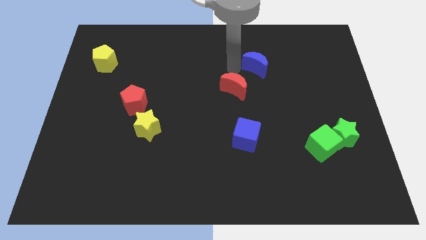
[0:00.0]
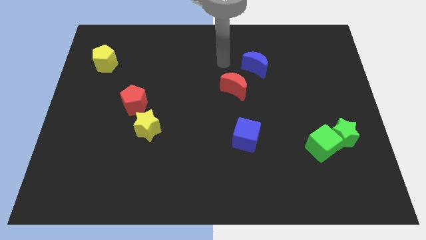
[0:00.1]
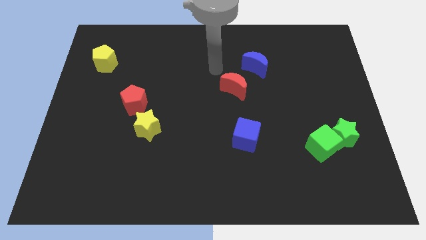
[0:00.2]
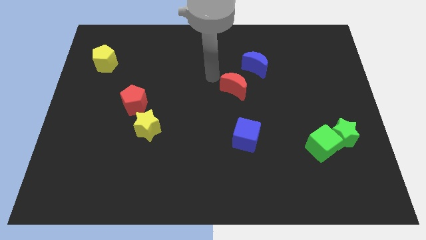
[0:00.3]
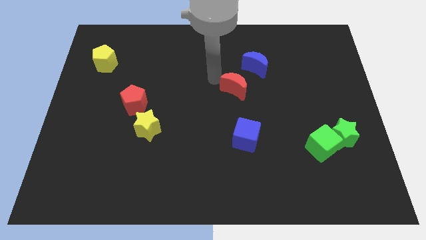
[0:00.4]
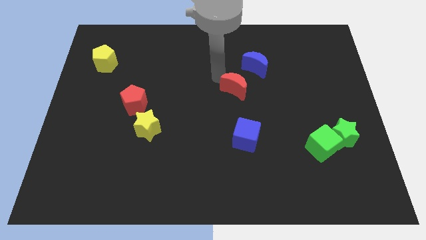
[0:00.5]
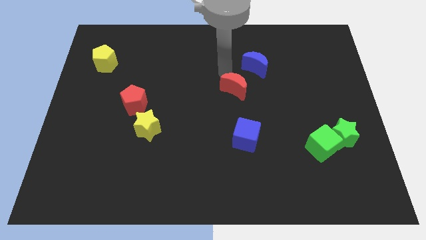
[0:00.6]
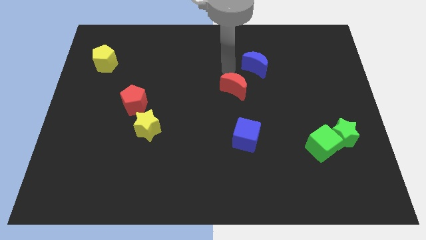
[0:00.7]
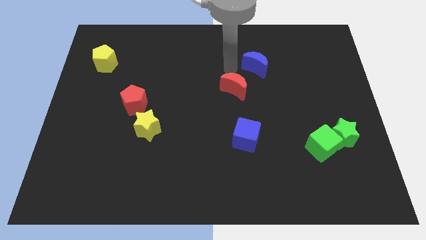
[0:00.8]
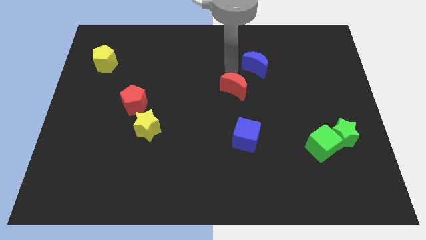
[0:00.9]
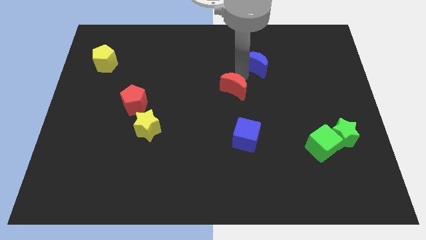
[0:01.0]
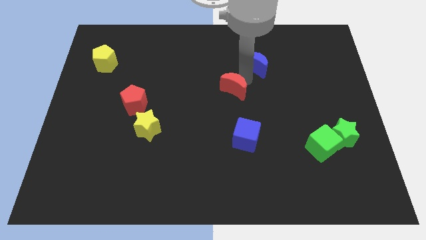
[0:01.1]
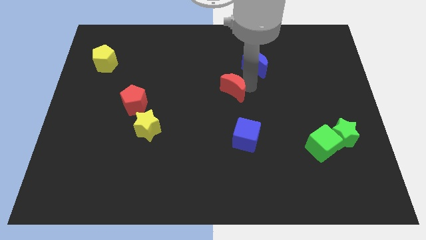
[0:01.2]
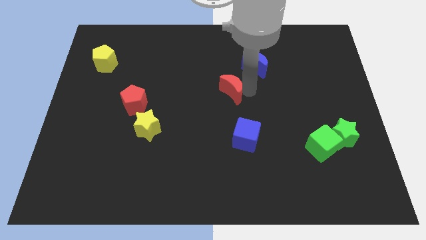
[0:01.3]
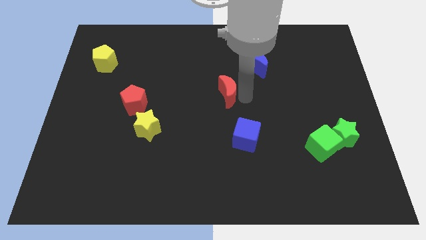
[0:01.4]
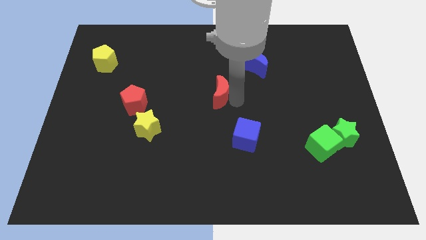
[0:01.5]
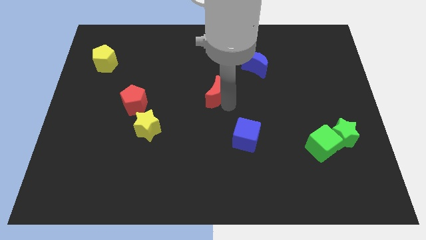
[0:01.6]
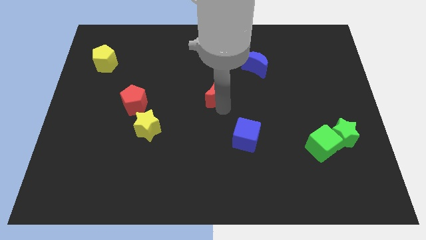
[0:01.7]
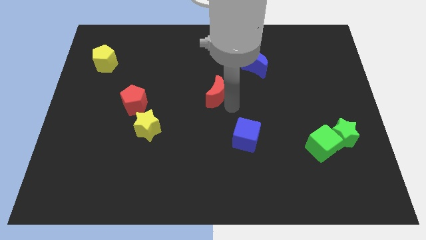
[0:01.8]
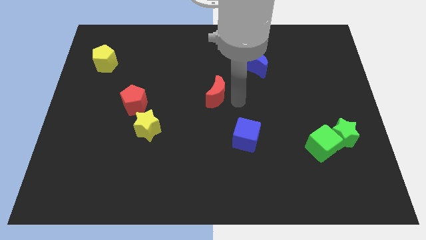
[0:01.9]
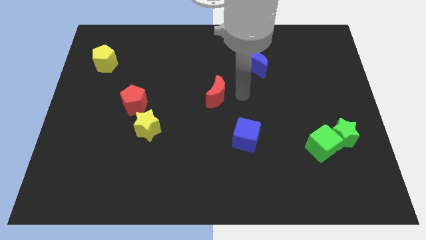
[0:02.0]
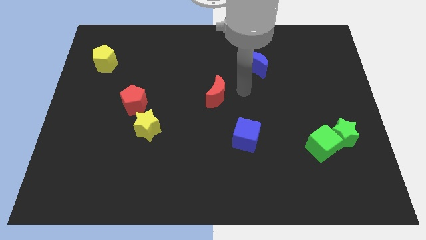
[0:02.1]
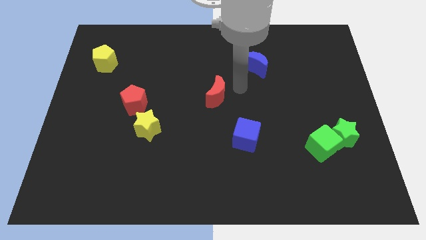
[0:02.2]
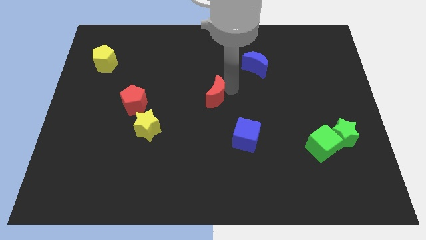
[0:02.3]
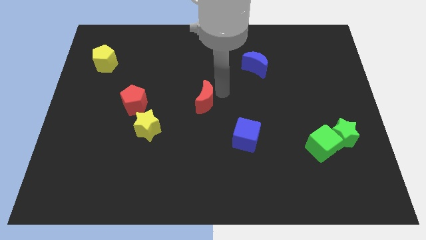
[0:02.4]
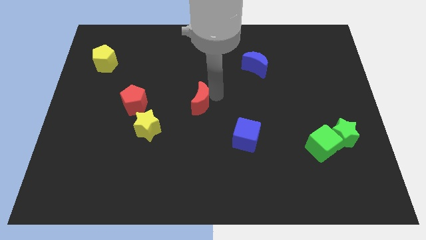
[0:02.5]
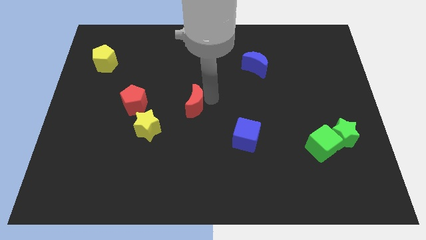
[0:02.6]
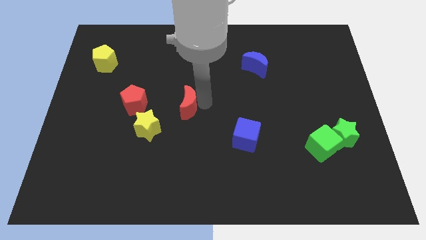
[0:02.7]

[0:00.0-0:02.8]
move the red moon closely towards the yellow star

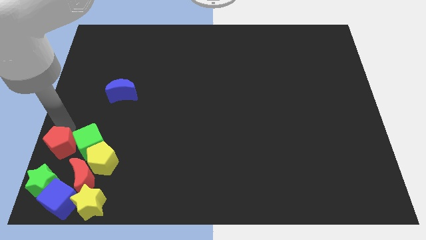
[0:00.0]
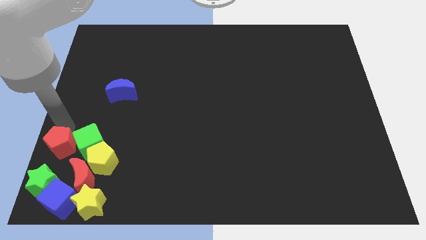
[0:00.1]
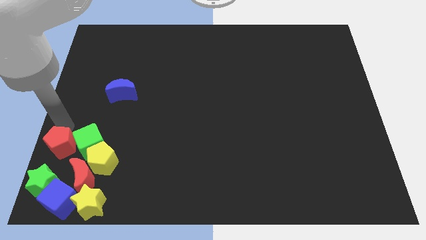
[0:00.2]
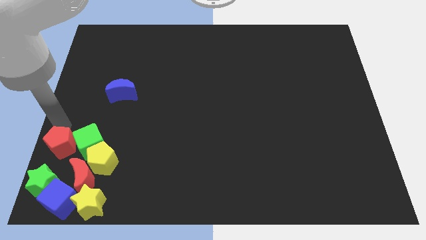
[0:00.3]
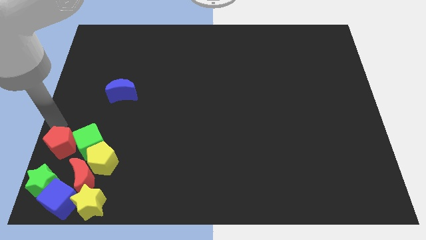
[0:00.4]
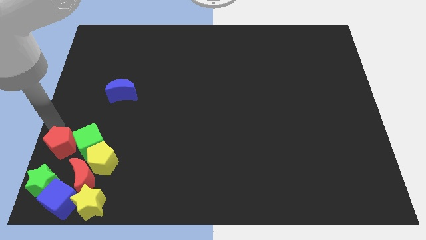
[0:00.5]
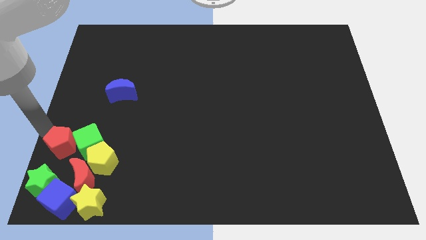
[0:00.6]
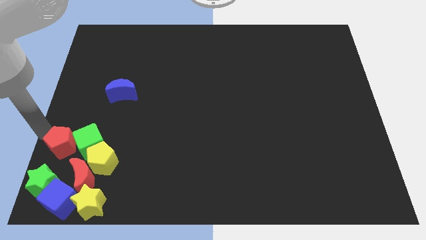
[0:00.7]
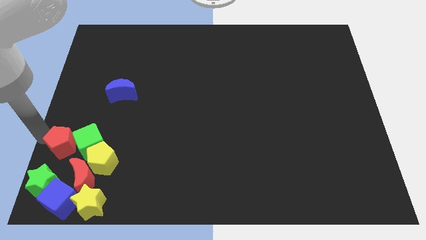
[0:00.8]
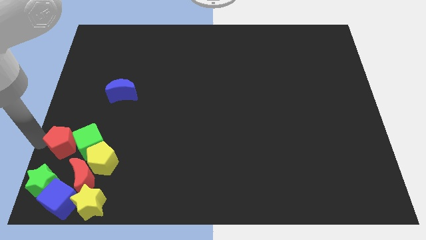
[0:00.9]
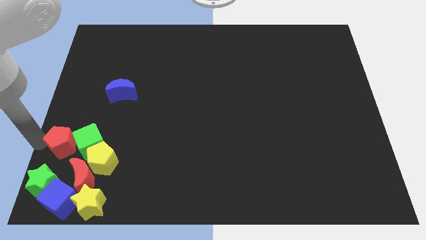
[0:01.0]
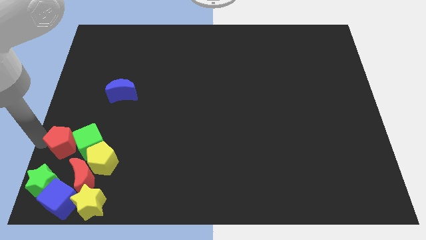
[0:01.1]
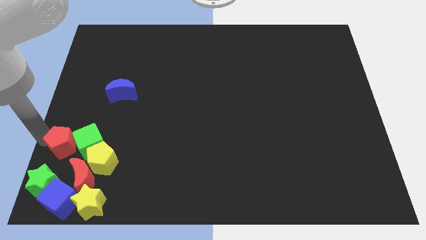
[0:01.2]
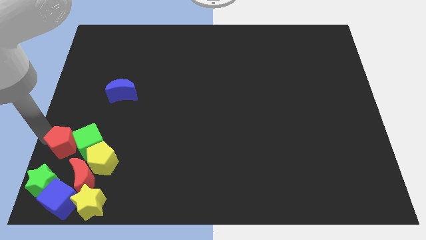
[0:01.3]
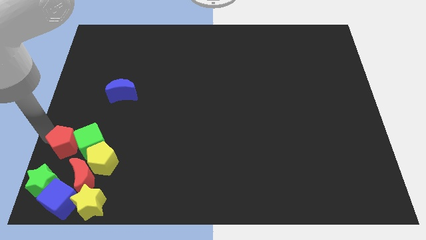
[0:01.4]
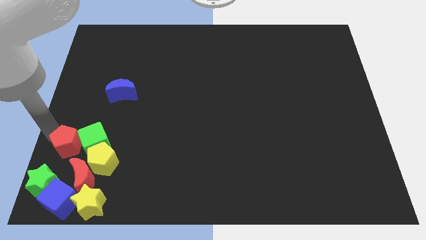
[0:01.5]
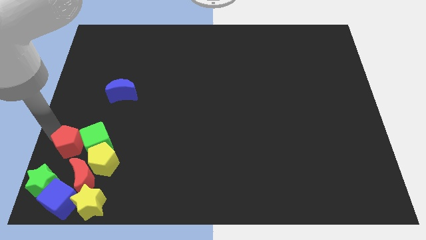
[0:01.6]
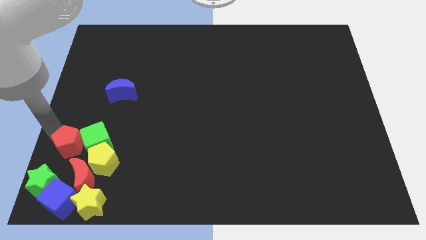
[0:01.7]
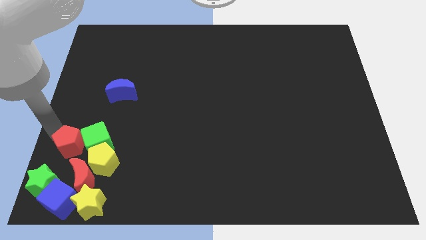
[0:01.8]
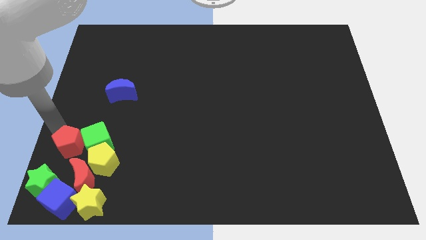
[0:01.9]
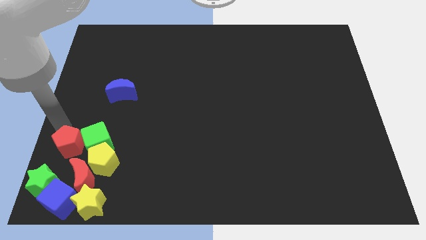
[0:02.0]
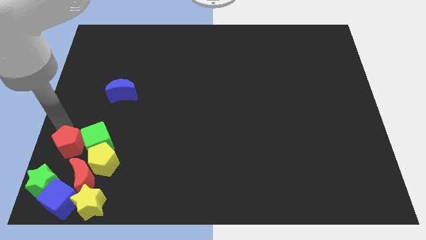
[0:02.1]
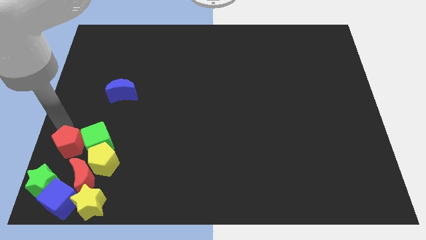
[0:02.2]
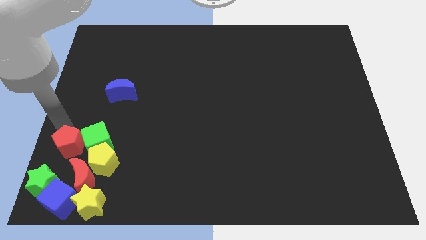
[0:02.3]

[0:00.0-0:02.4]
move red pentagon and green cube slightly right

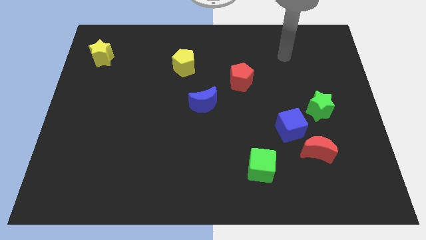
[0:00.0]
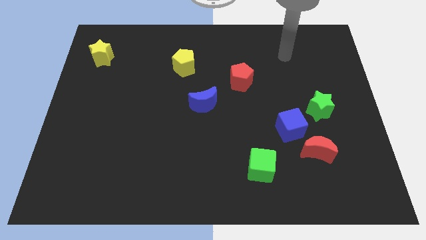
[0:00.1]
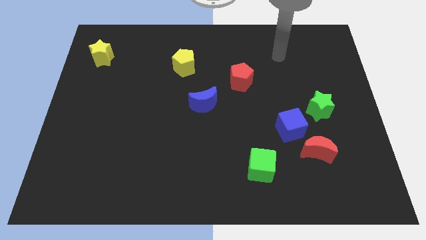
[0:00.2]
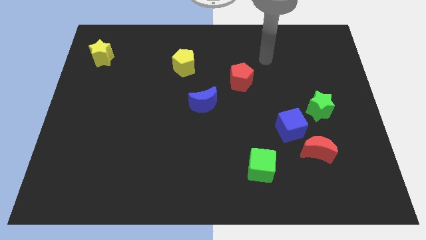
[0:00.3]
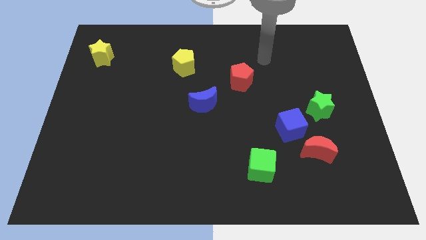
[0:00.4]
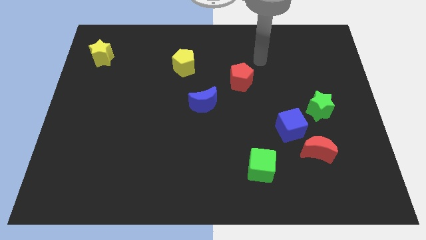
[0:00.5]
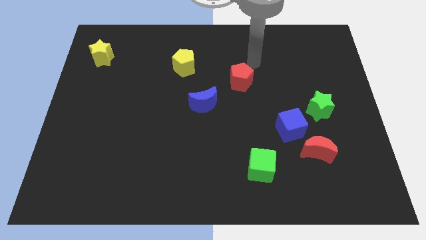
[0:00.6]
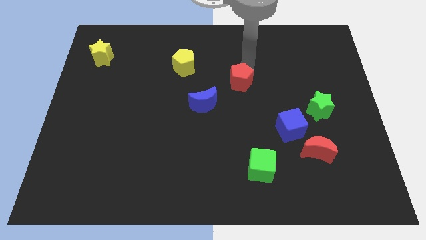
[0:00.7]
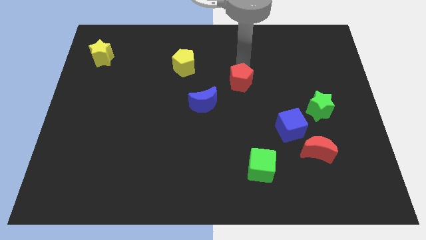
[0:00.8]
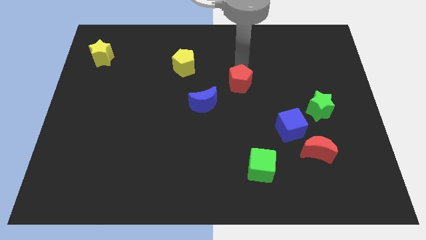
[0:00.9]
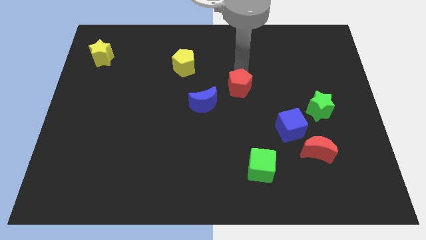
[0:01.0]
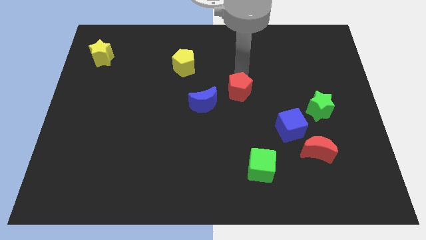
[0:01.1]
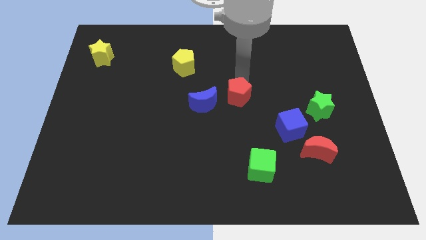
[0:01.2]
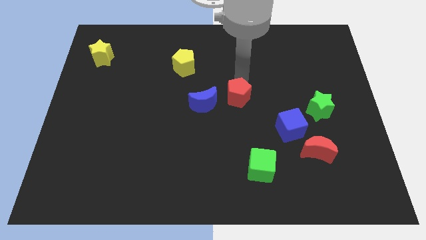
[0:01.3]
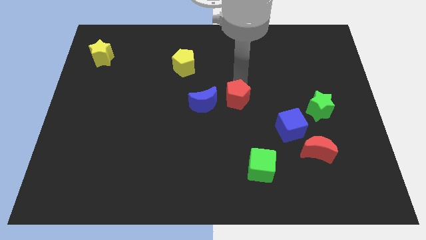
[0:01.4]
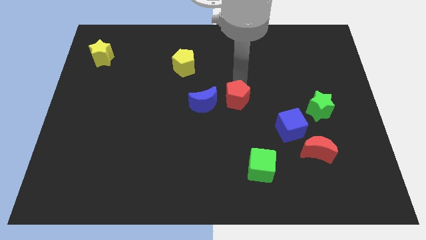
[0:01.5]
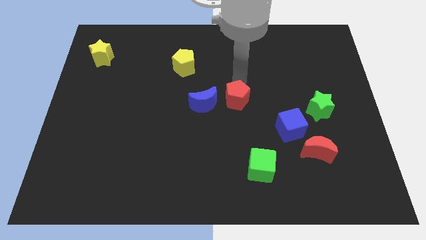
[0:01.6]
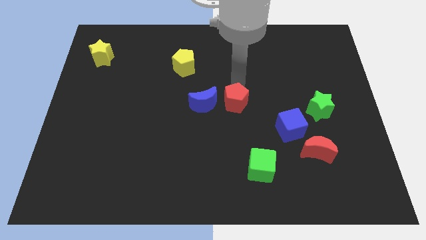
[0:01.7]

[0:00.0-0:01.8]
slide the red pentagon to the right of the blue crescent

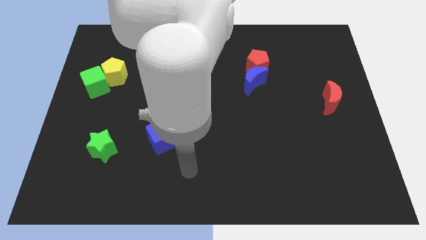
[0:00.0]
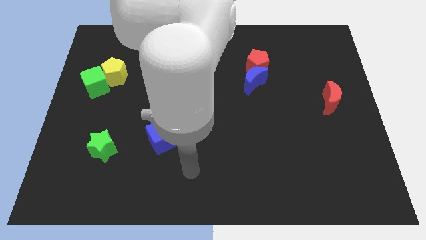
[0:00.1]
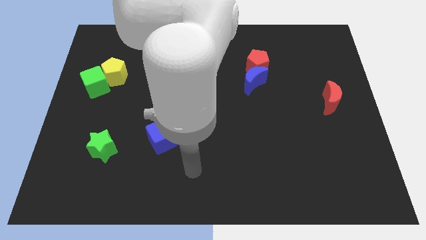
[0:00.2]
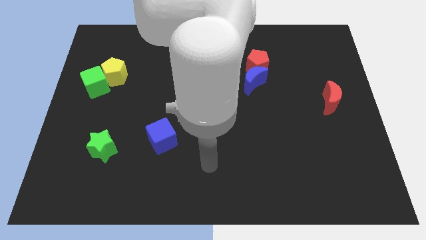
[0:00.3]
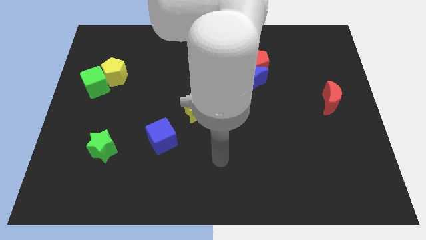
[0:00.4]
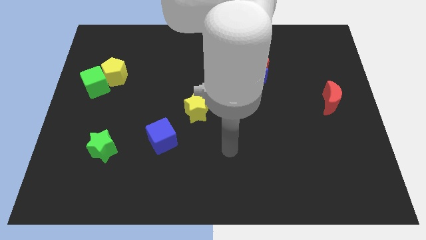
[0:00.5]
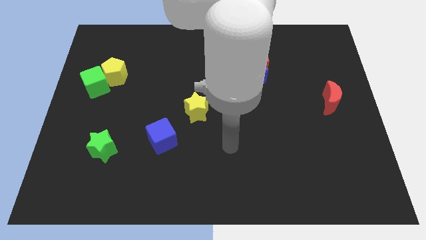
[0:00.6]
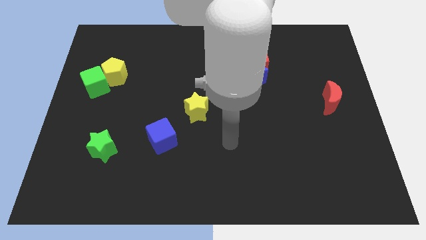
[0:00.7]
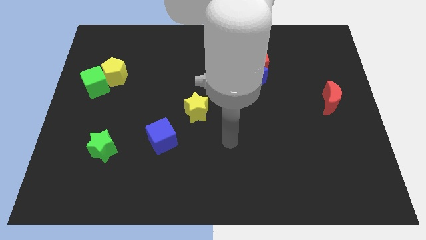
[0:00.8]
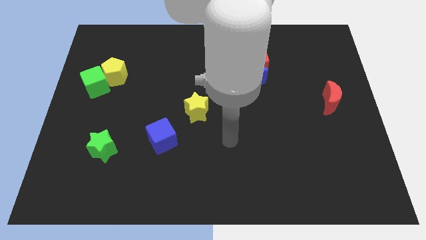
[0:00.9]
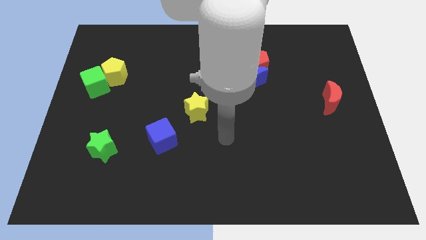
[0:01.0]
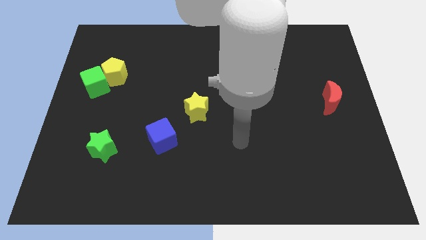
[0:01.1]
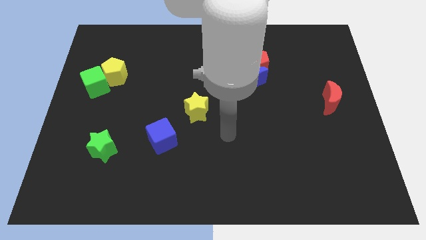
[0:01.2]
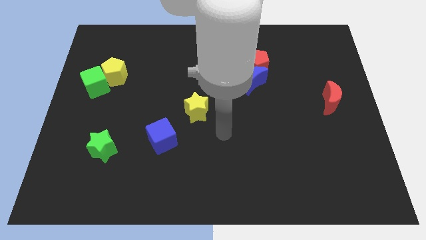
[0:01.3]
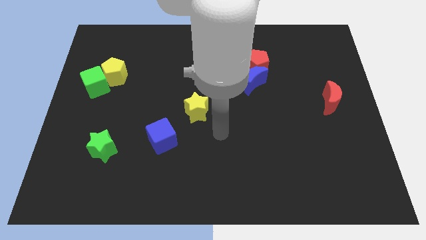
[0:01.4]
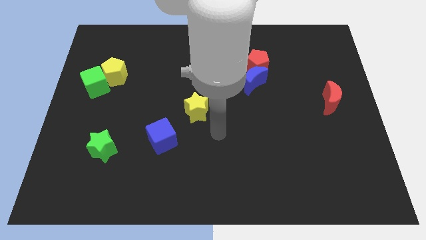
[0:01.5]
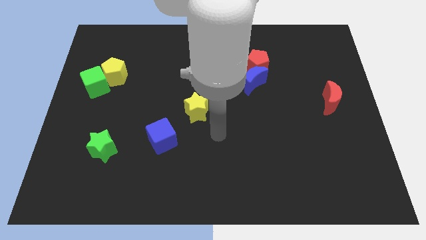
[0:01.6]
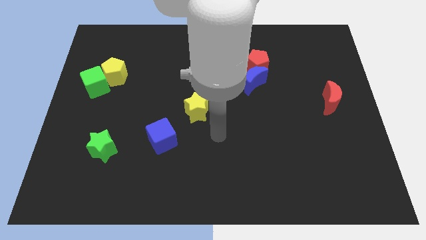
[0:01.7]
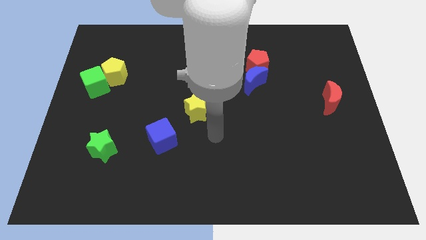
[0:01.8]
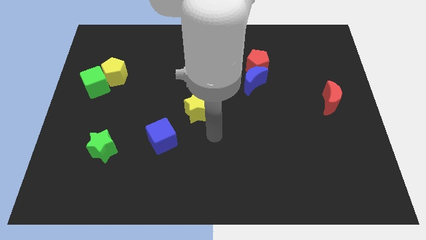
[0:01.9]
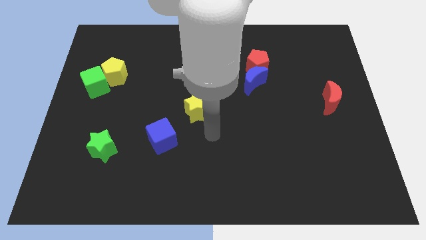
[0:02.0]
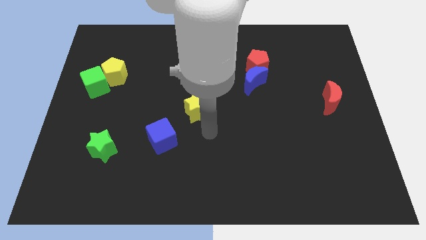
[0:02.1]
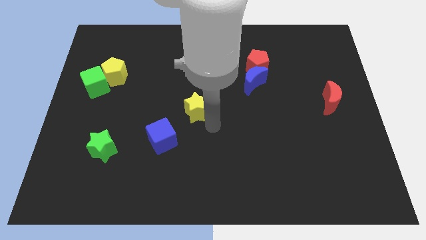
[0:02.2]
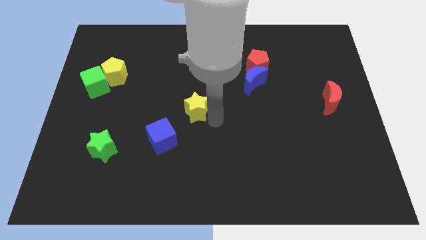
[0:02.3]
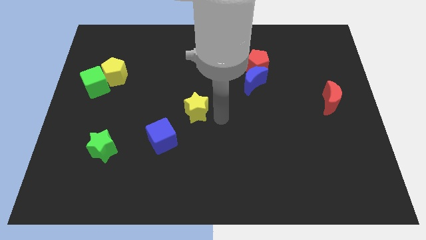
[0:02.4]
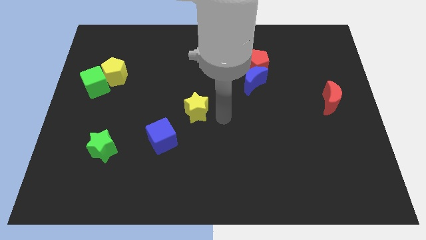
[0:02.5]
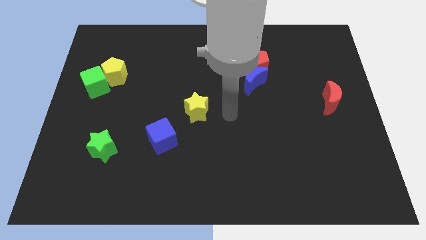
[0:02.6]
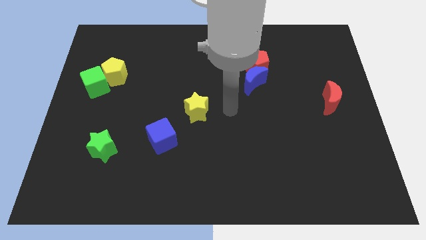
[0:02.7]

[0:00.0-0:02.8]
point your arm to the right side of yellow star
